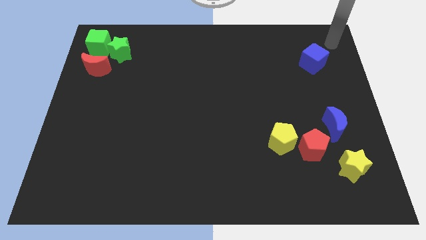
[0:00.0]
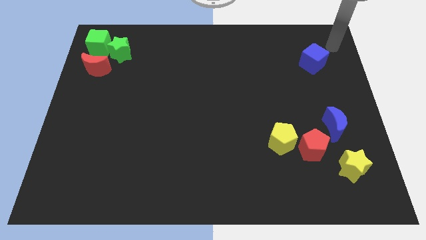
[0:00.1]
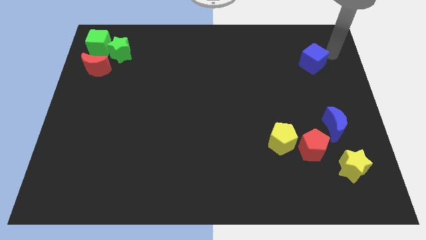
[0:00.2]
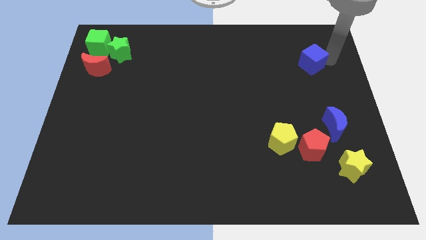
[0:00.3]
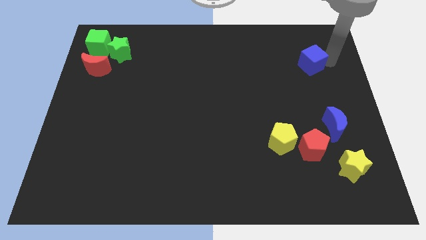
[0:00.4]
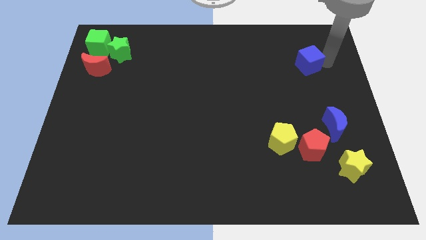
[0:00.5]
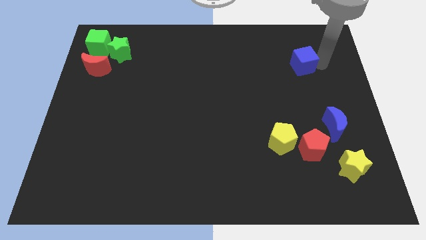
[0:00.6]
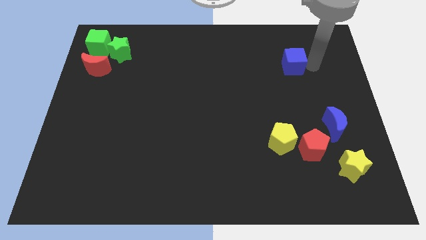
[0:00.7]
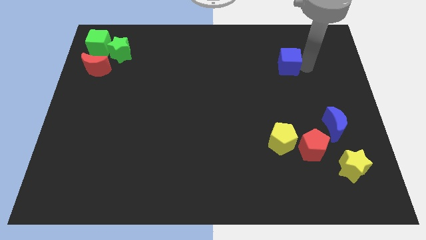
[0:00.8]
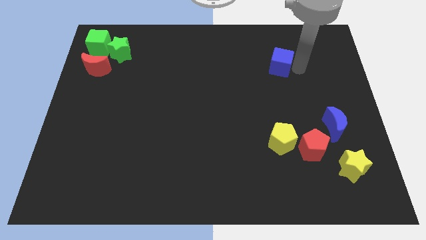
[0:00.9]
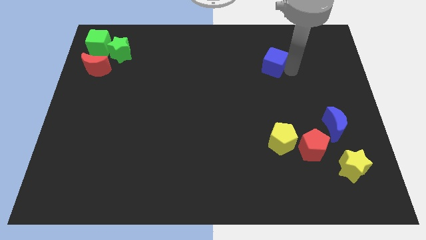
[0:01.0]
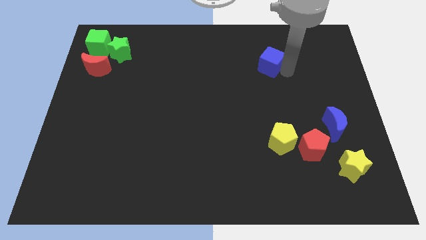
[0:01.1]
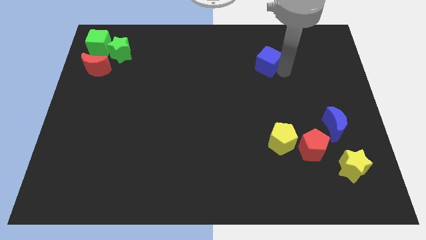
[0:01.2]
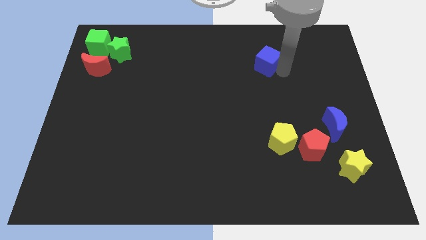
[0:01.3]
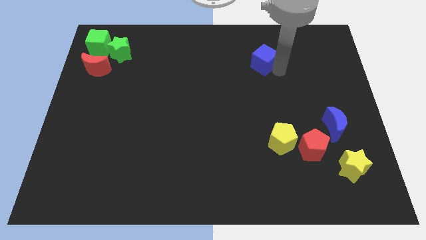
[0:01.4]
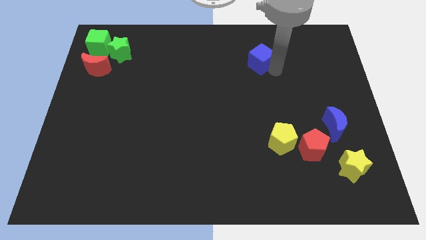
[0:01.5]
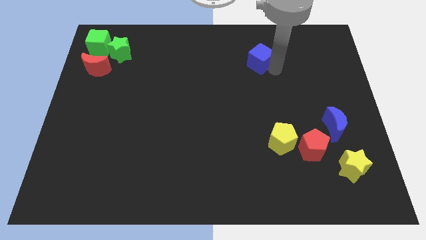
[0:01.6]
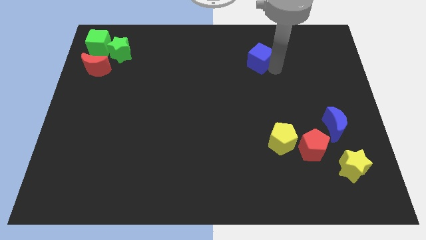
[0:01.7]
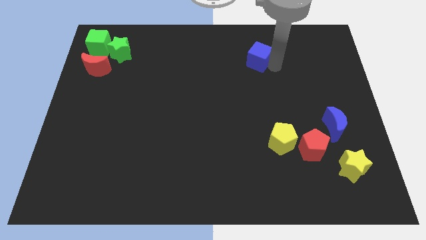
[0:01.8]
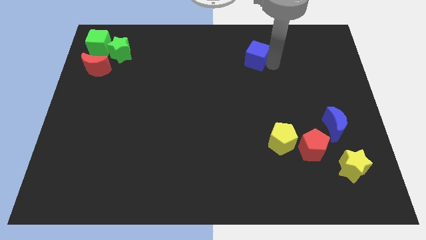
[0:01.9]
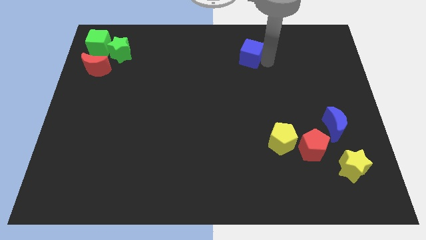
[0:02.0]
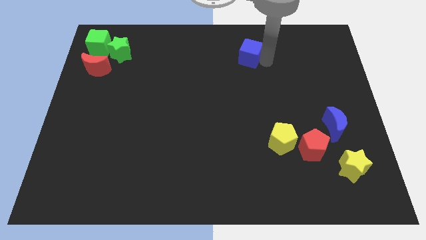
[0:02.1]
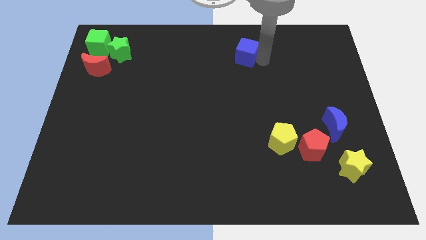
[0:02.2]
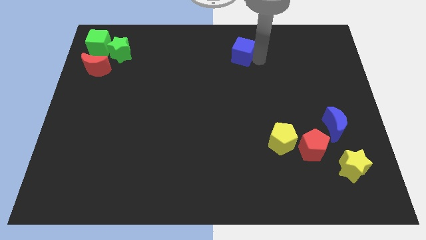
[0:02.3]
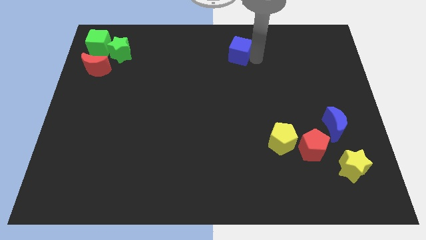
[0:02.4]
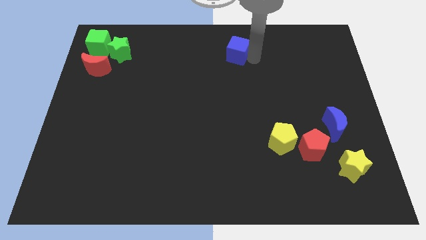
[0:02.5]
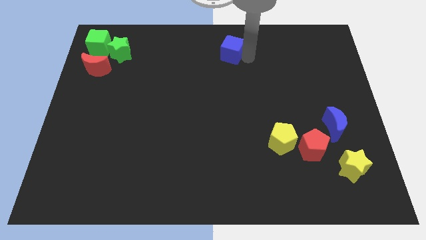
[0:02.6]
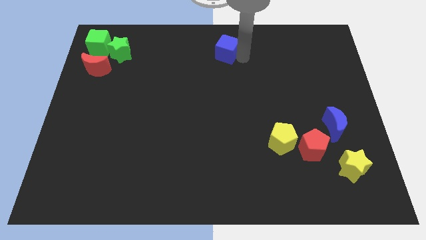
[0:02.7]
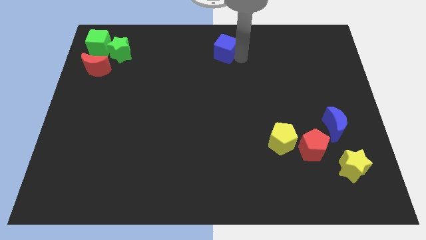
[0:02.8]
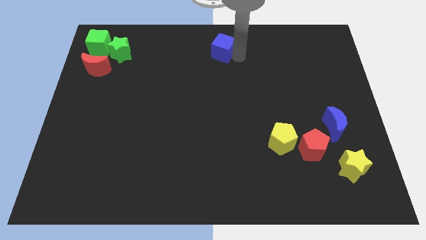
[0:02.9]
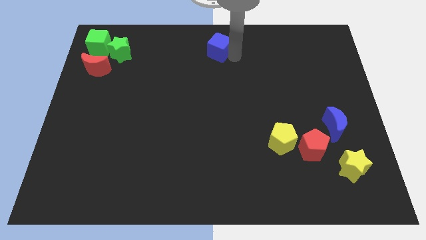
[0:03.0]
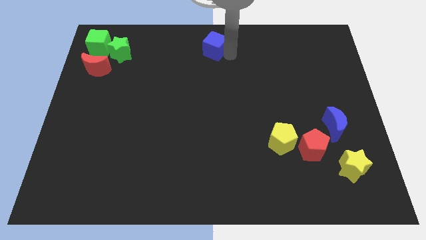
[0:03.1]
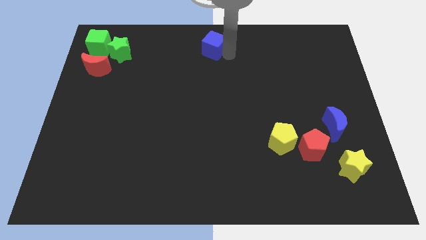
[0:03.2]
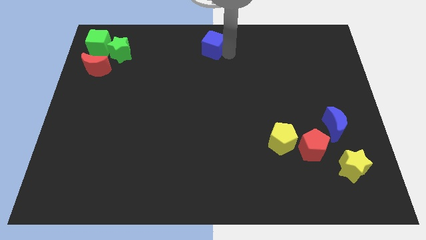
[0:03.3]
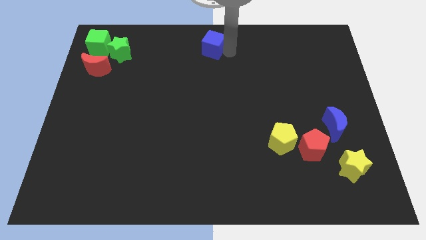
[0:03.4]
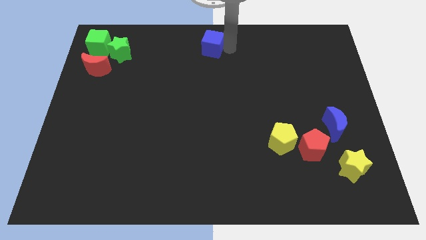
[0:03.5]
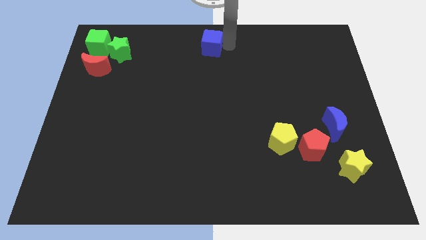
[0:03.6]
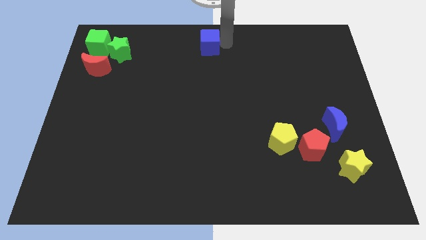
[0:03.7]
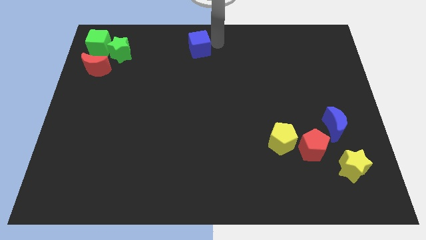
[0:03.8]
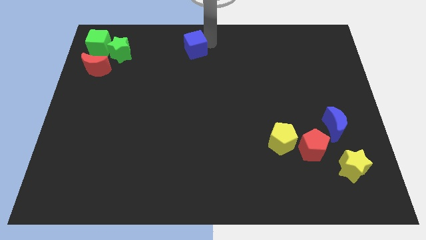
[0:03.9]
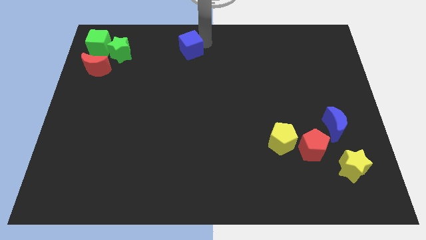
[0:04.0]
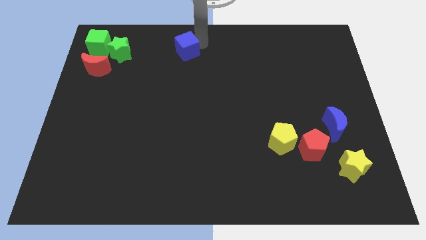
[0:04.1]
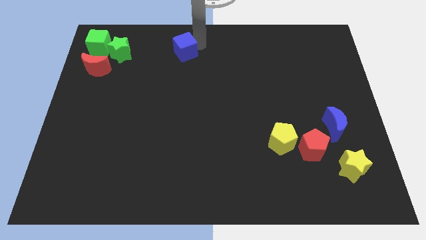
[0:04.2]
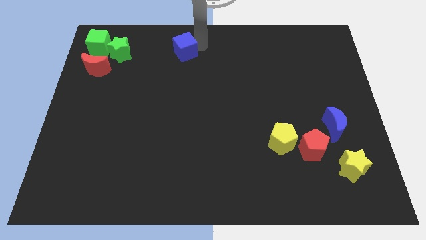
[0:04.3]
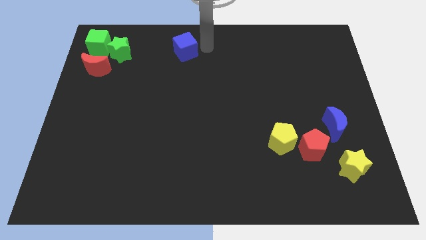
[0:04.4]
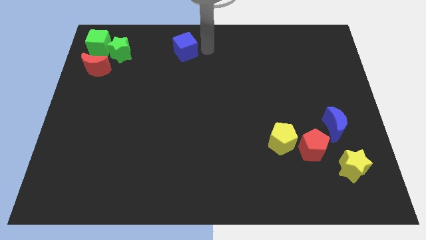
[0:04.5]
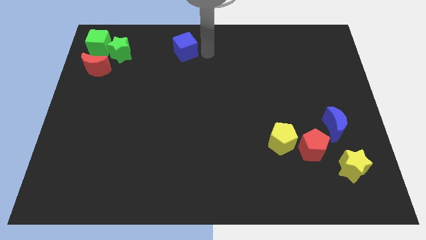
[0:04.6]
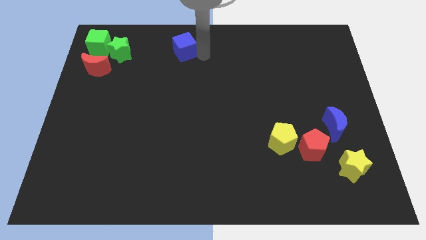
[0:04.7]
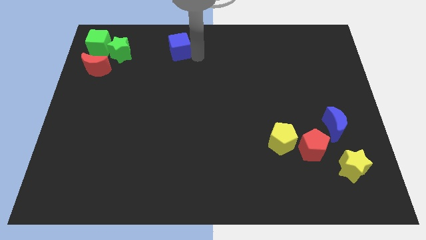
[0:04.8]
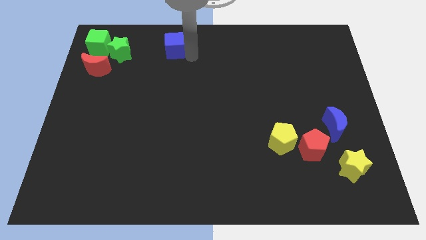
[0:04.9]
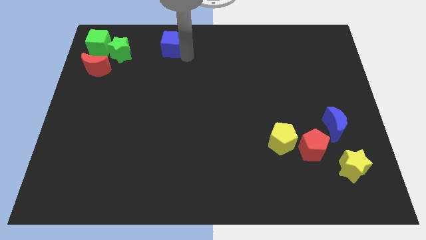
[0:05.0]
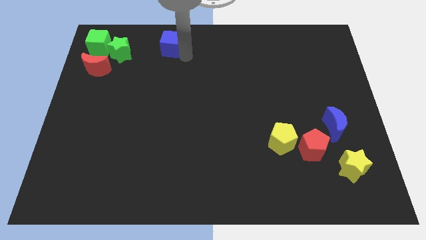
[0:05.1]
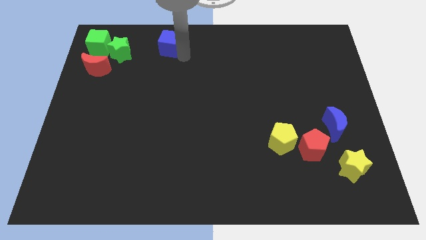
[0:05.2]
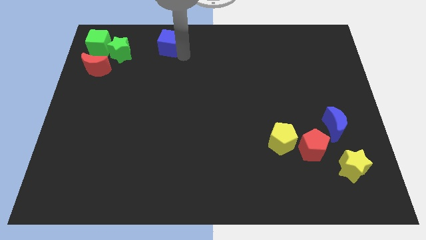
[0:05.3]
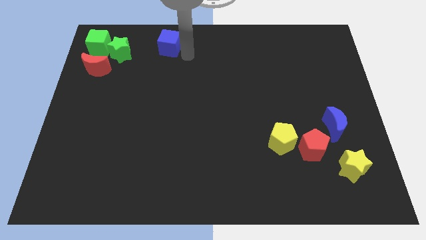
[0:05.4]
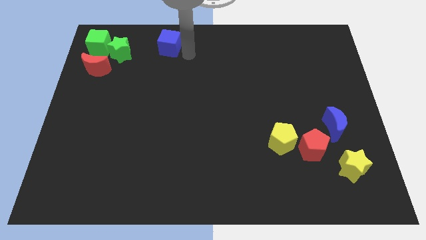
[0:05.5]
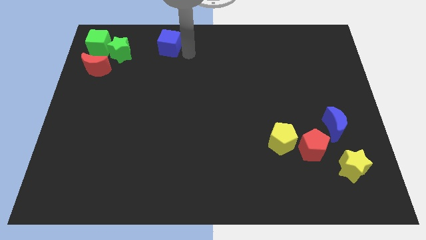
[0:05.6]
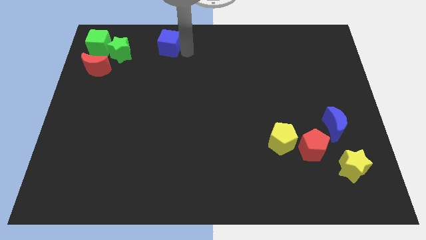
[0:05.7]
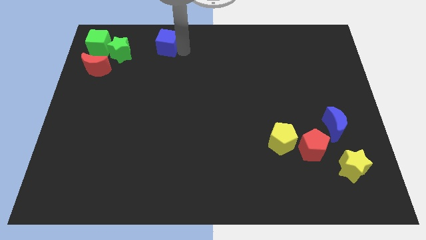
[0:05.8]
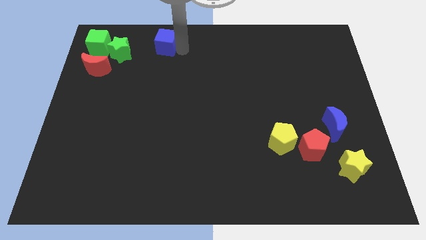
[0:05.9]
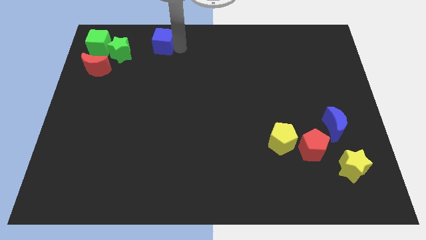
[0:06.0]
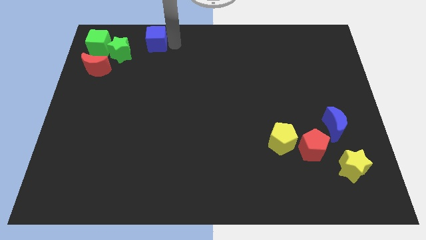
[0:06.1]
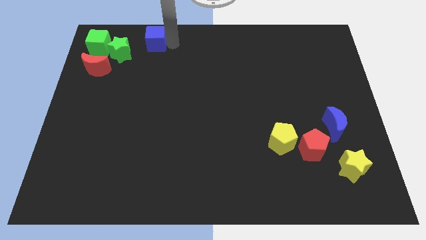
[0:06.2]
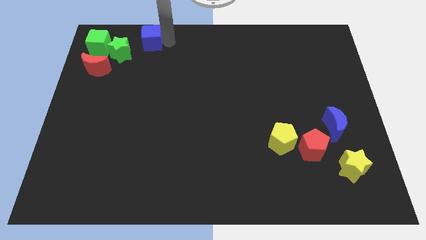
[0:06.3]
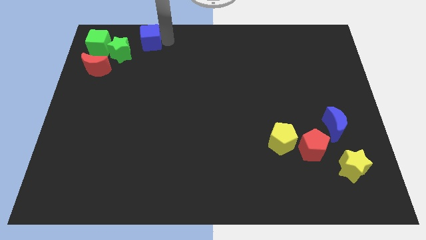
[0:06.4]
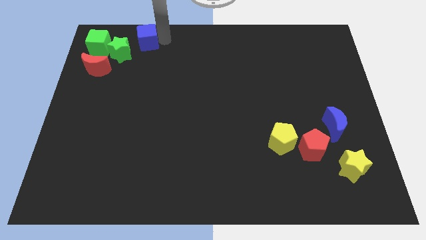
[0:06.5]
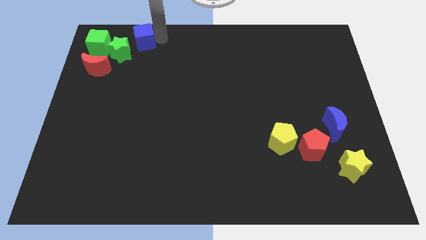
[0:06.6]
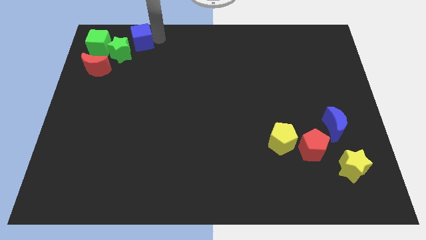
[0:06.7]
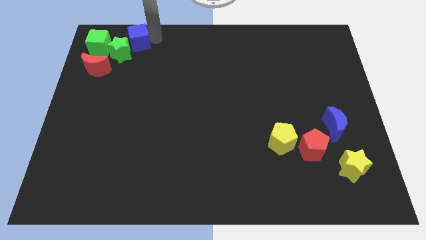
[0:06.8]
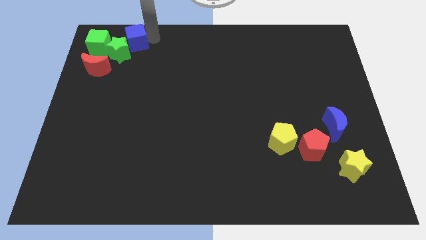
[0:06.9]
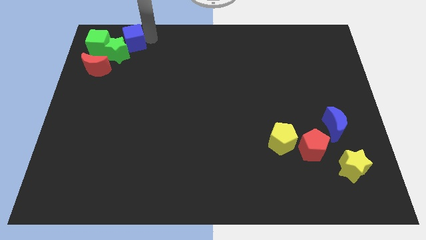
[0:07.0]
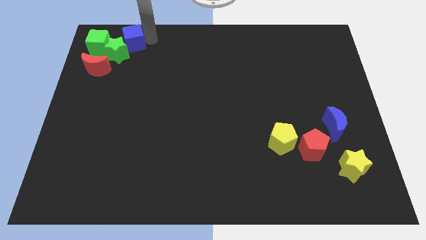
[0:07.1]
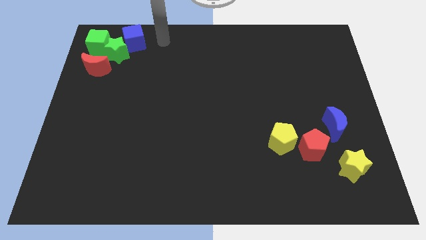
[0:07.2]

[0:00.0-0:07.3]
move the blue cube to the right of the green star

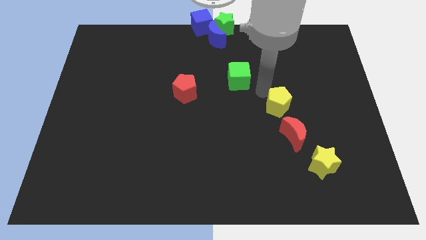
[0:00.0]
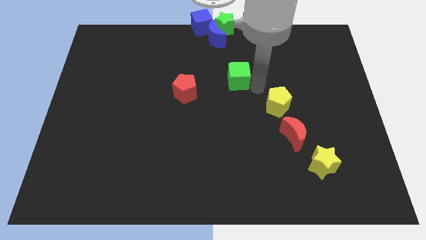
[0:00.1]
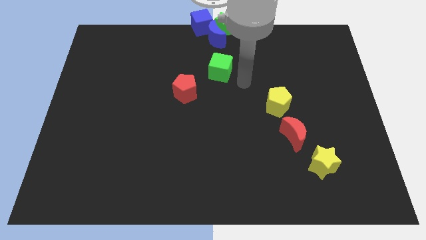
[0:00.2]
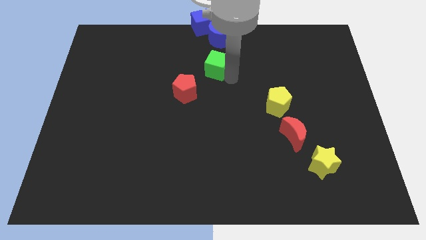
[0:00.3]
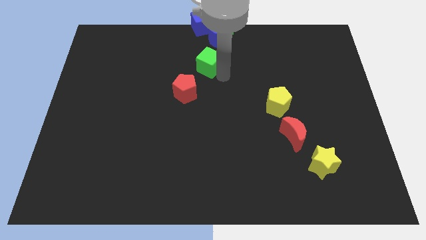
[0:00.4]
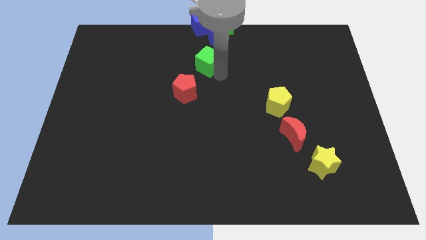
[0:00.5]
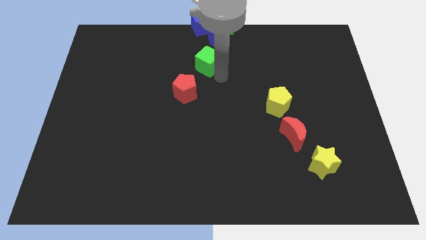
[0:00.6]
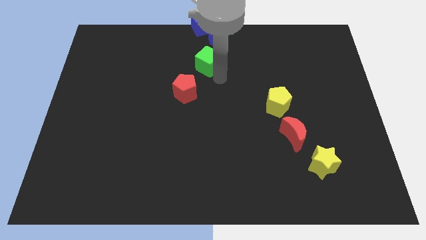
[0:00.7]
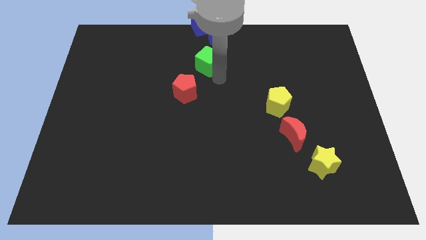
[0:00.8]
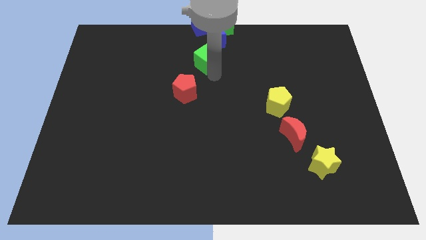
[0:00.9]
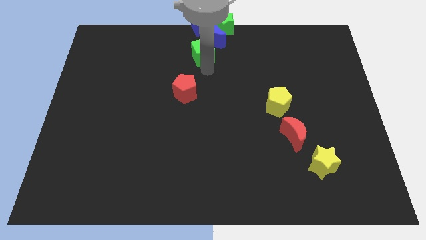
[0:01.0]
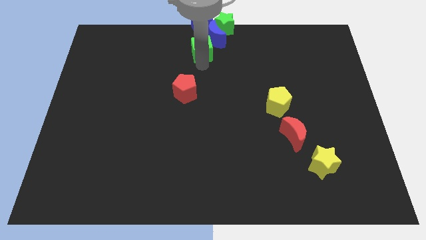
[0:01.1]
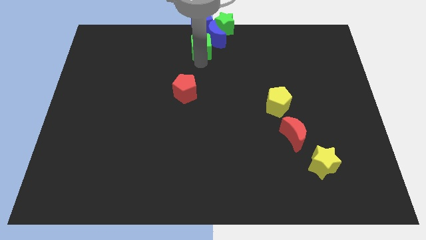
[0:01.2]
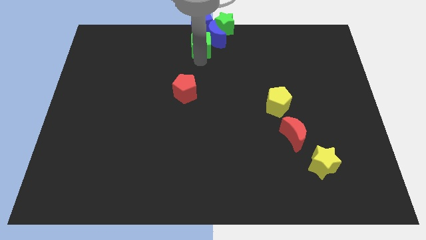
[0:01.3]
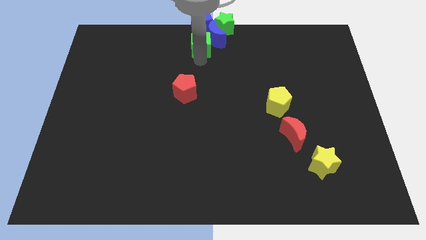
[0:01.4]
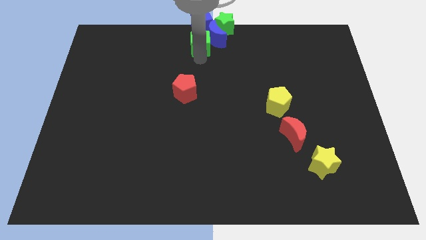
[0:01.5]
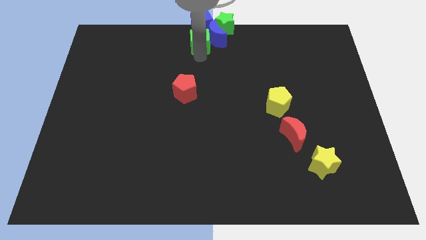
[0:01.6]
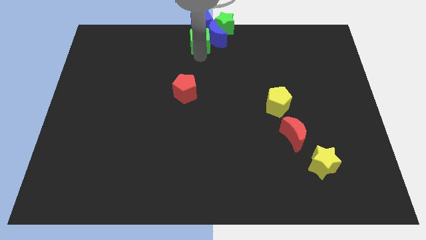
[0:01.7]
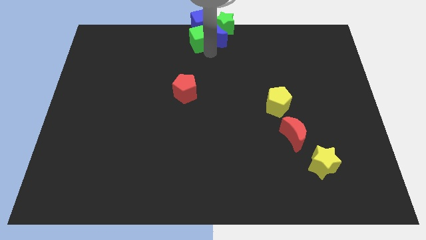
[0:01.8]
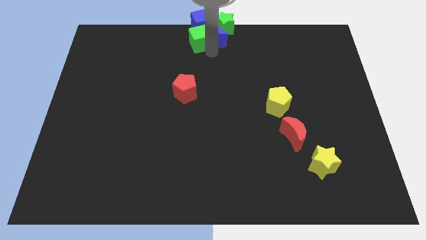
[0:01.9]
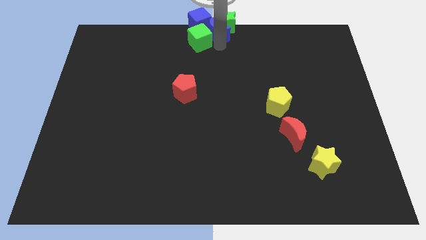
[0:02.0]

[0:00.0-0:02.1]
place the green cube at the bottom side of the blue cube
